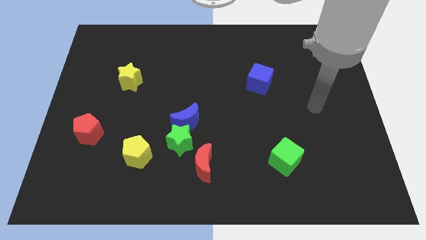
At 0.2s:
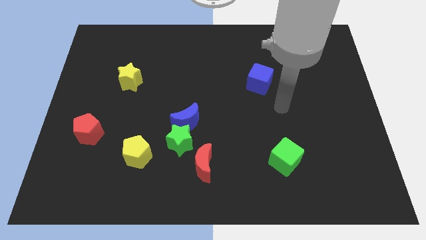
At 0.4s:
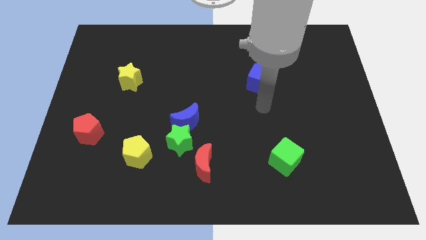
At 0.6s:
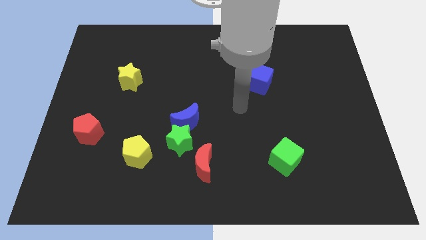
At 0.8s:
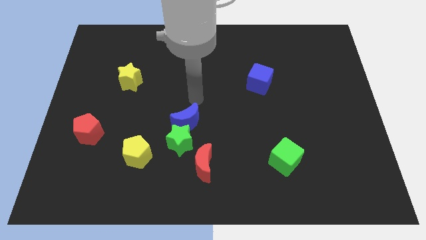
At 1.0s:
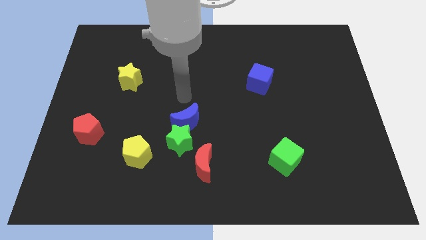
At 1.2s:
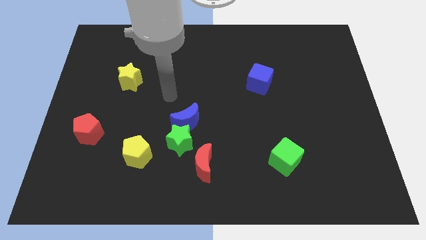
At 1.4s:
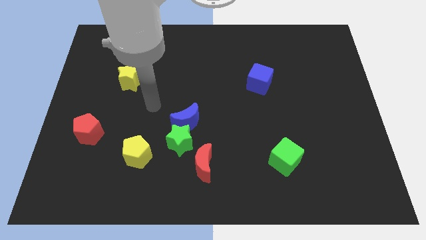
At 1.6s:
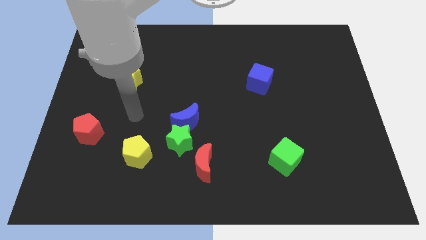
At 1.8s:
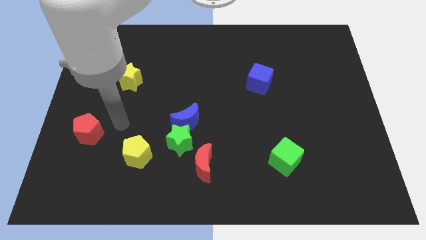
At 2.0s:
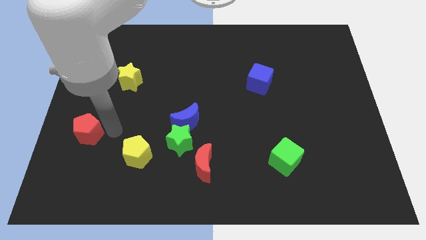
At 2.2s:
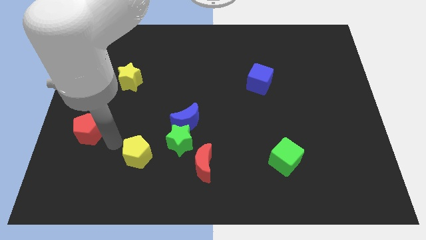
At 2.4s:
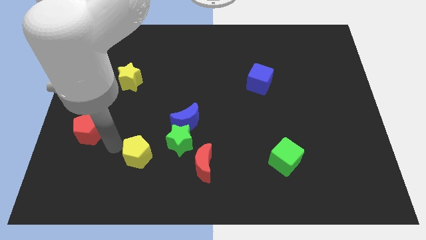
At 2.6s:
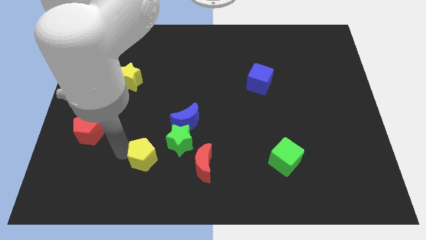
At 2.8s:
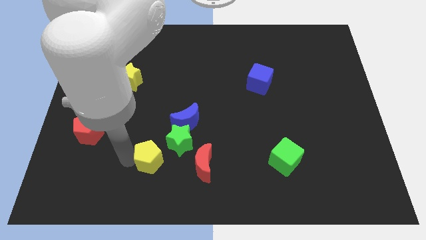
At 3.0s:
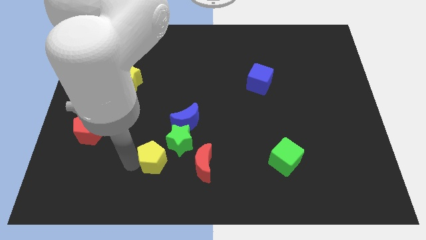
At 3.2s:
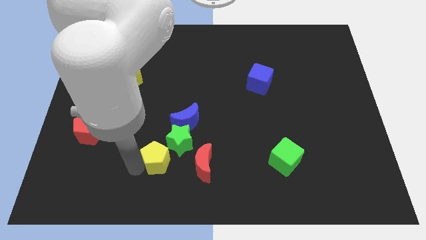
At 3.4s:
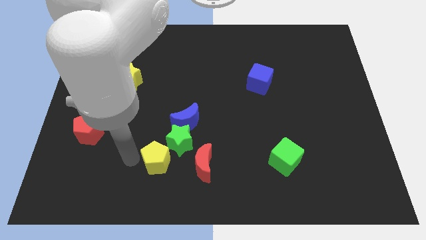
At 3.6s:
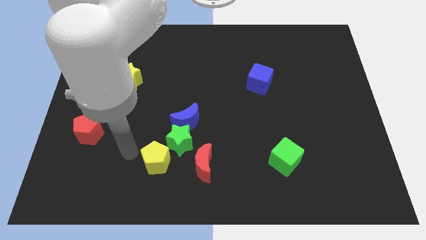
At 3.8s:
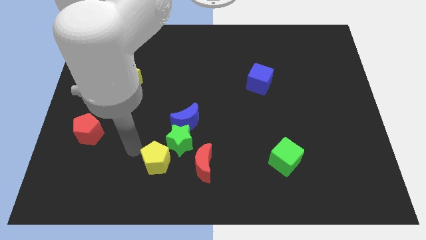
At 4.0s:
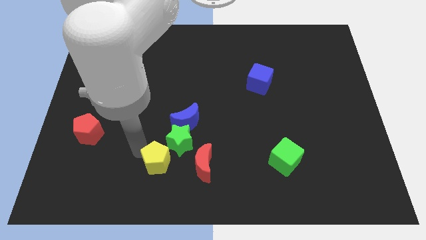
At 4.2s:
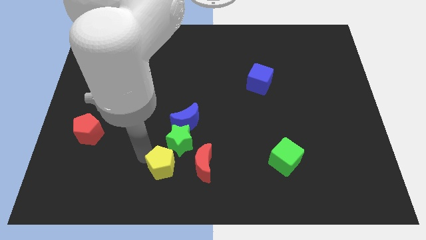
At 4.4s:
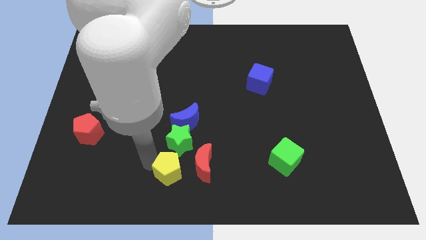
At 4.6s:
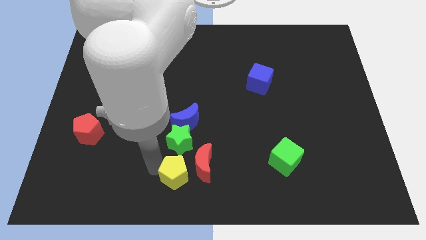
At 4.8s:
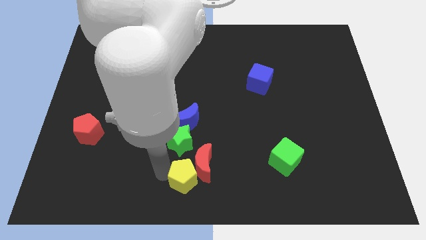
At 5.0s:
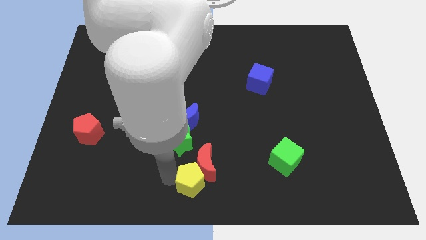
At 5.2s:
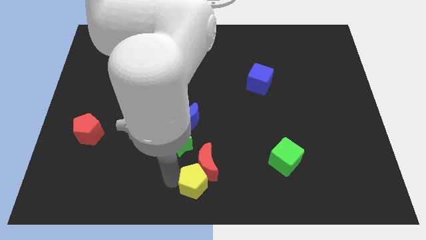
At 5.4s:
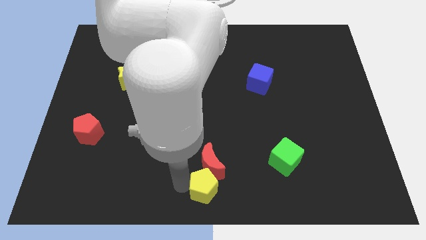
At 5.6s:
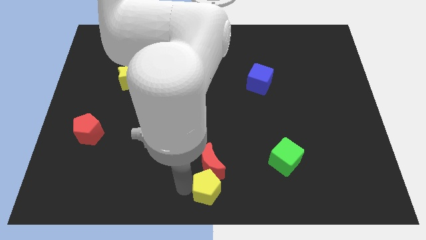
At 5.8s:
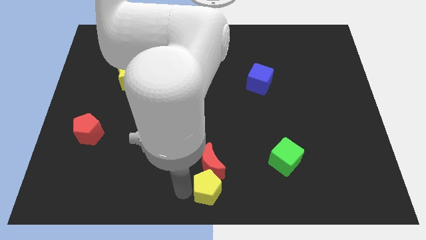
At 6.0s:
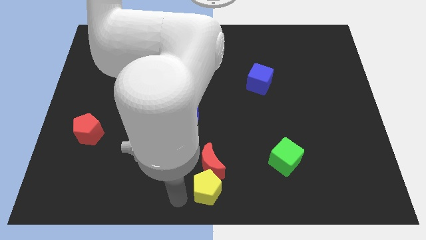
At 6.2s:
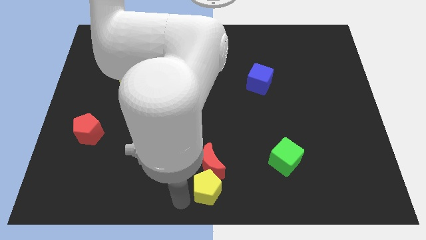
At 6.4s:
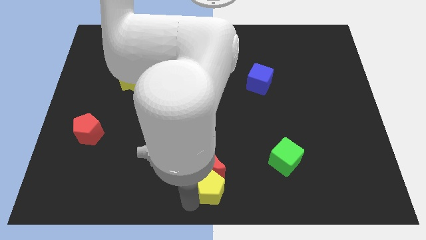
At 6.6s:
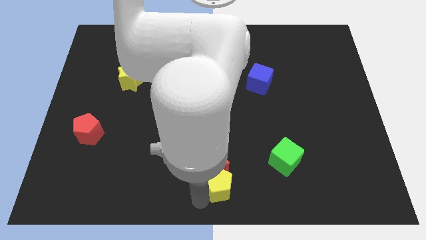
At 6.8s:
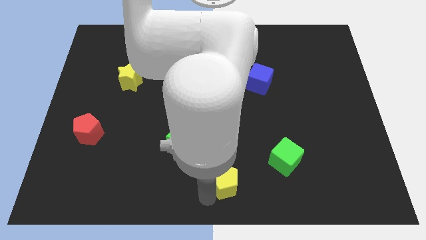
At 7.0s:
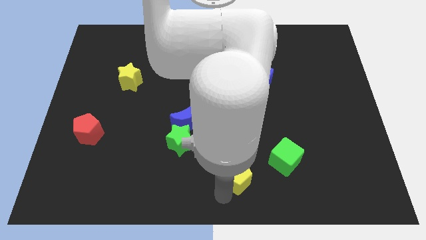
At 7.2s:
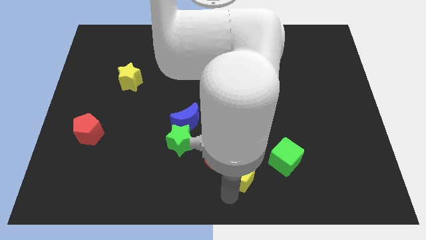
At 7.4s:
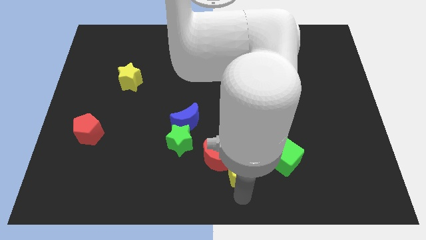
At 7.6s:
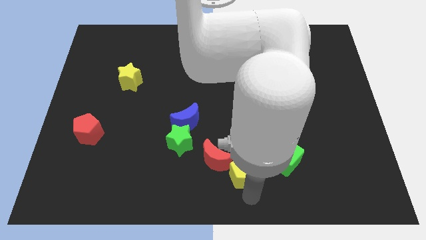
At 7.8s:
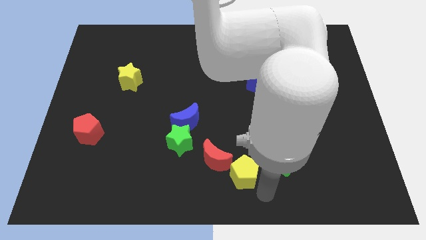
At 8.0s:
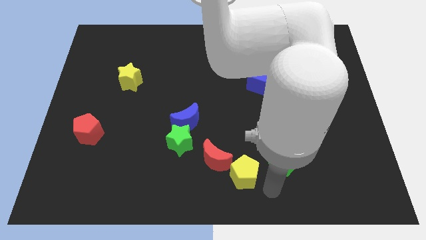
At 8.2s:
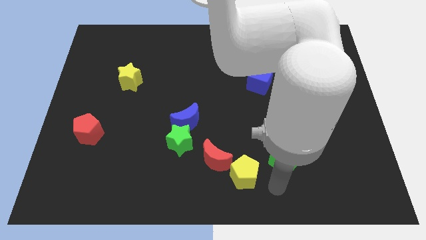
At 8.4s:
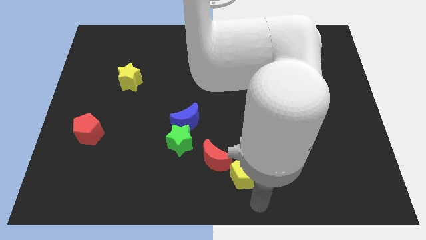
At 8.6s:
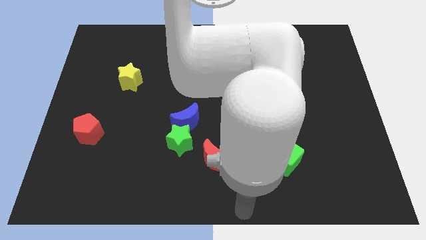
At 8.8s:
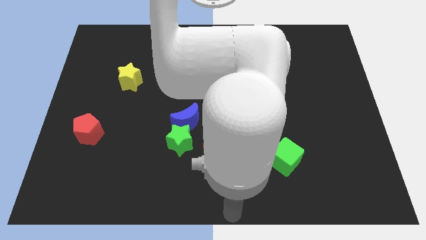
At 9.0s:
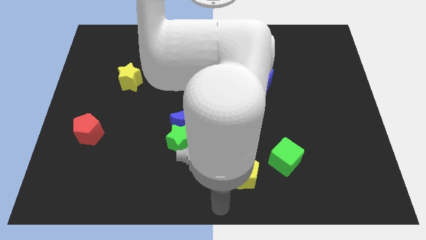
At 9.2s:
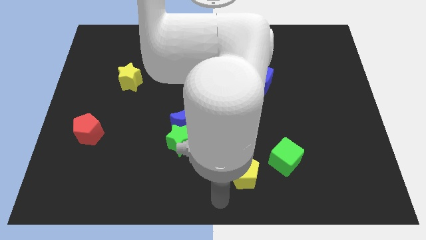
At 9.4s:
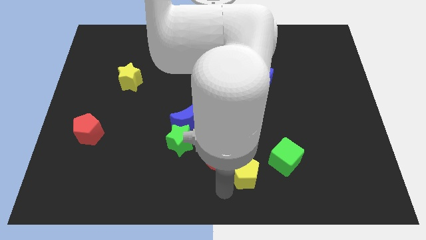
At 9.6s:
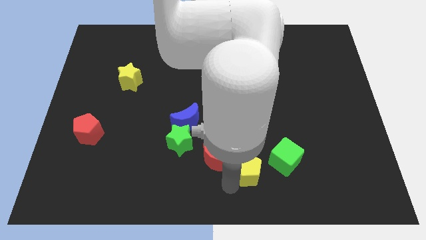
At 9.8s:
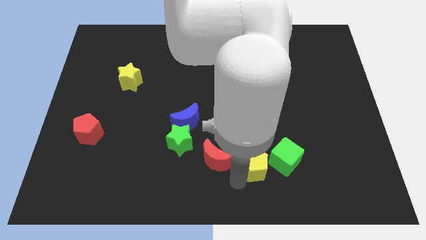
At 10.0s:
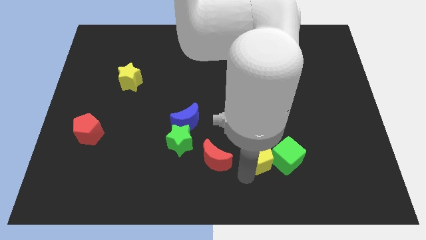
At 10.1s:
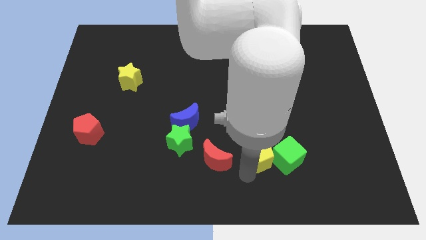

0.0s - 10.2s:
put the yellow pentagon to the green cube

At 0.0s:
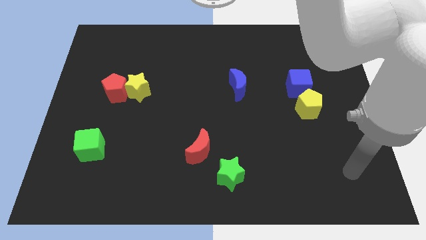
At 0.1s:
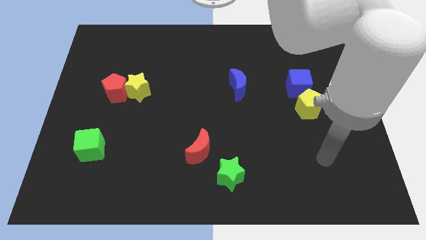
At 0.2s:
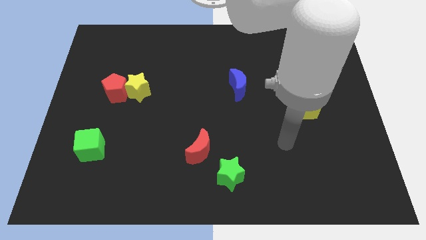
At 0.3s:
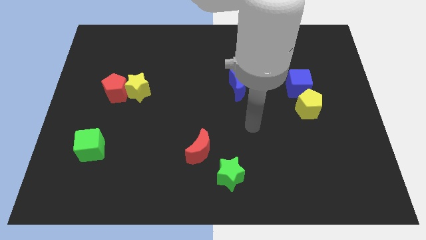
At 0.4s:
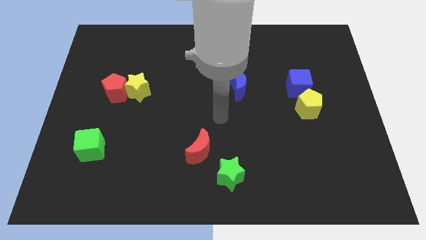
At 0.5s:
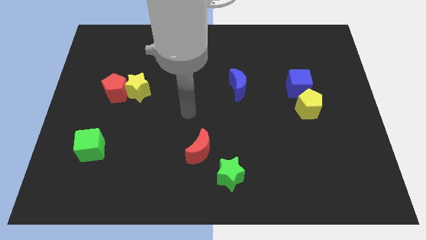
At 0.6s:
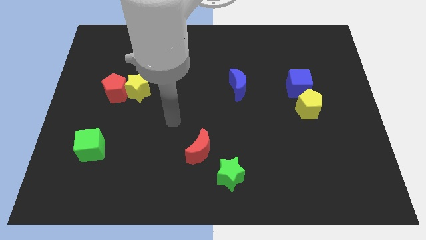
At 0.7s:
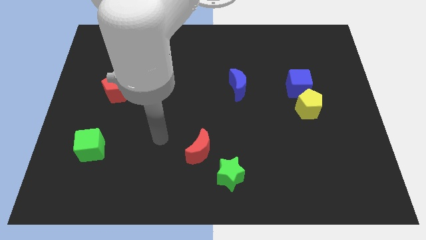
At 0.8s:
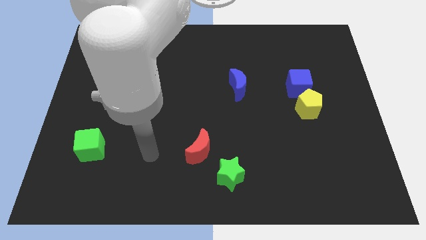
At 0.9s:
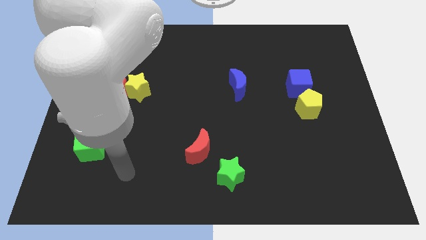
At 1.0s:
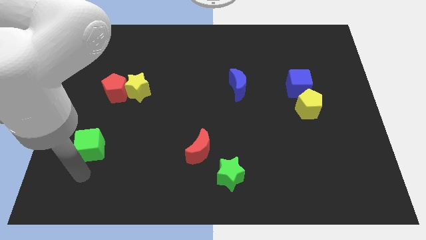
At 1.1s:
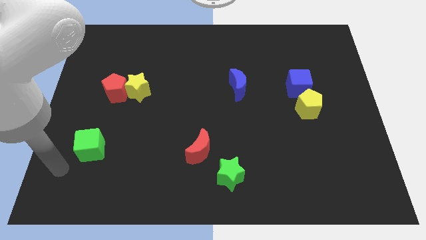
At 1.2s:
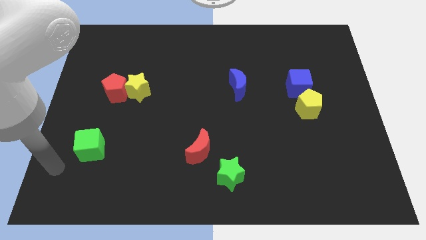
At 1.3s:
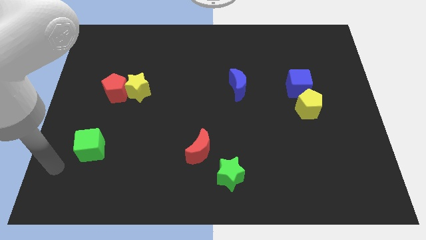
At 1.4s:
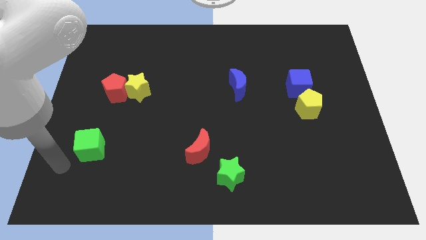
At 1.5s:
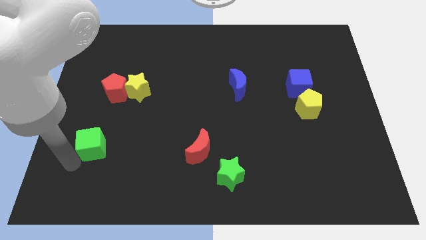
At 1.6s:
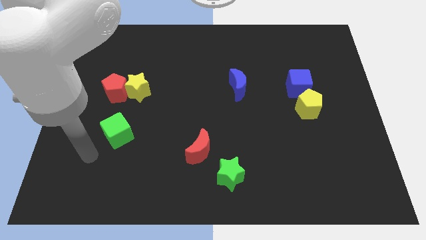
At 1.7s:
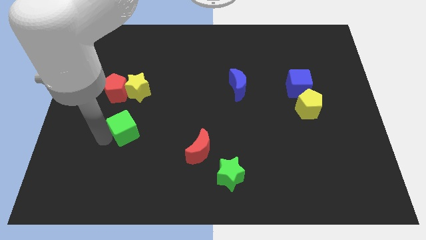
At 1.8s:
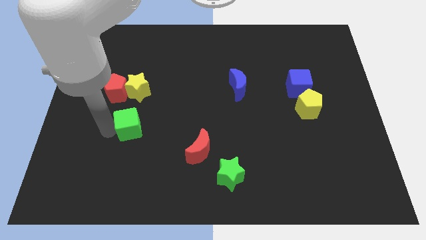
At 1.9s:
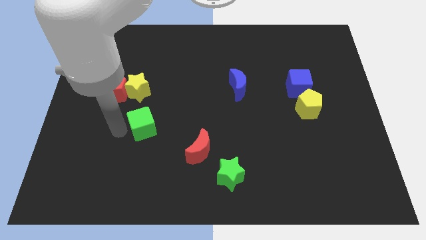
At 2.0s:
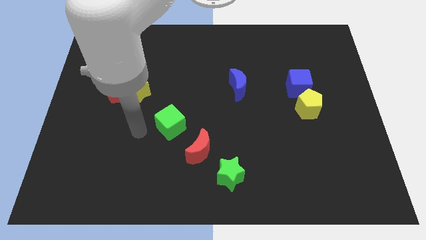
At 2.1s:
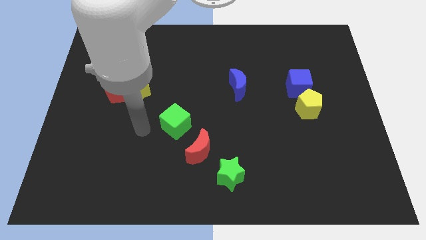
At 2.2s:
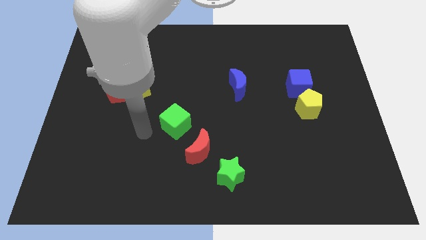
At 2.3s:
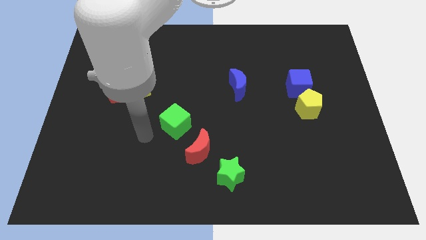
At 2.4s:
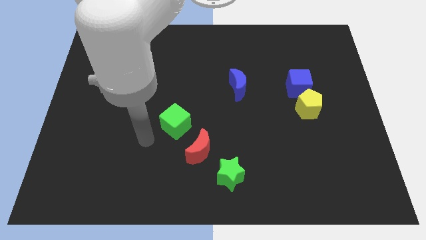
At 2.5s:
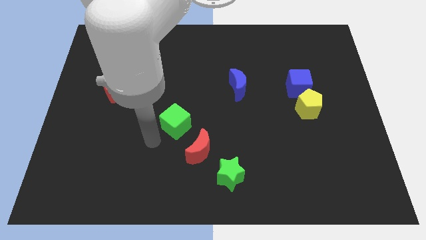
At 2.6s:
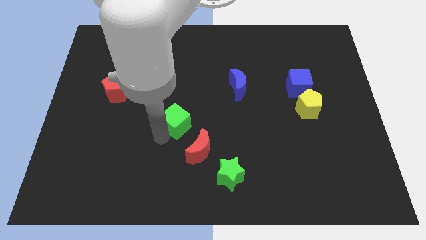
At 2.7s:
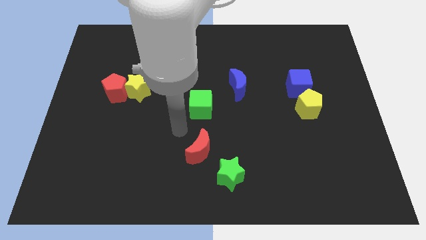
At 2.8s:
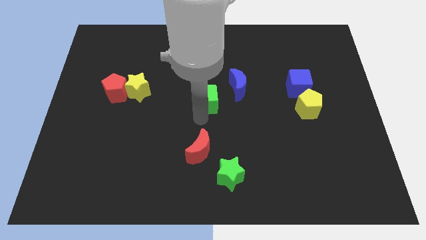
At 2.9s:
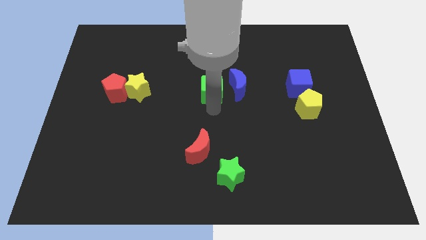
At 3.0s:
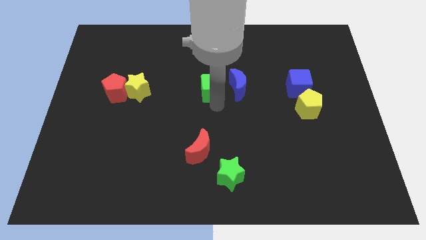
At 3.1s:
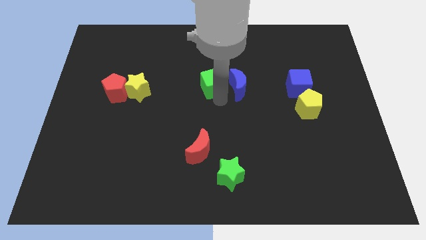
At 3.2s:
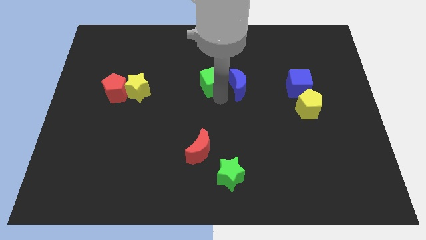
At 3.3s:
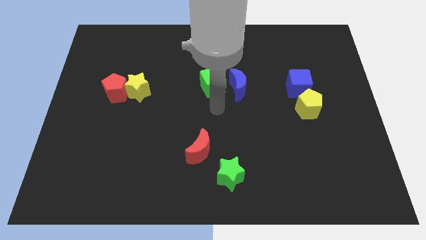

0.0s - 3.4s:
put the green cube next to the blue moon
